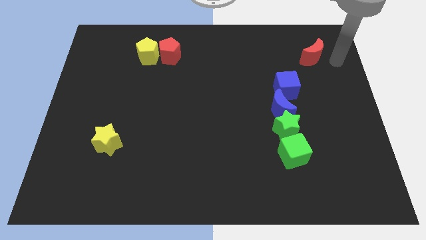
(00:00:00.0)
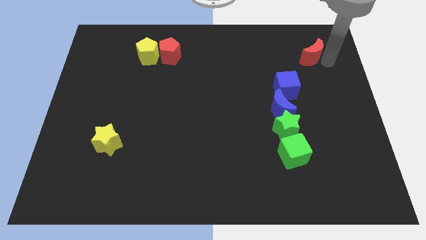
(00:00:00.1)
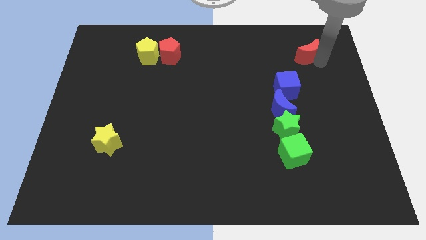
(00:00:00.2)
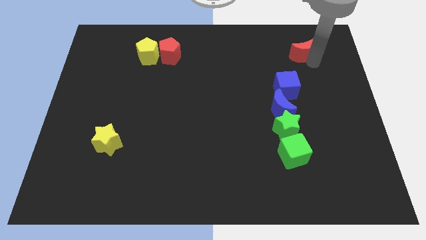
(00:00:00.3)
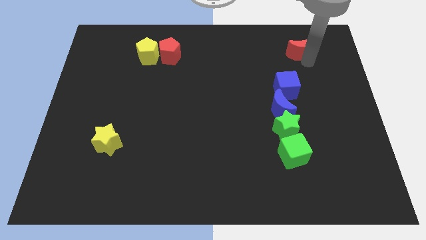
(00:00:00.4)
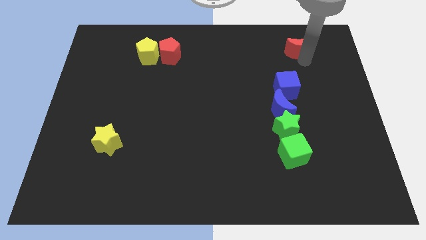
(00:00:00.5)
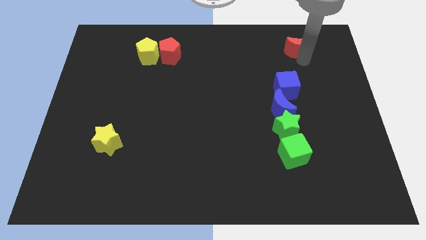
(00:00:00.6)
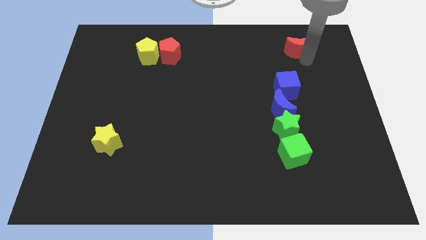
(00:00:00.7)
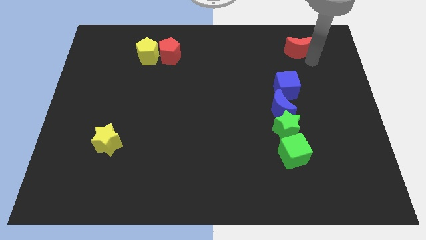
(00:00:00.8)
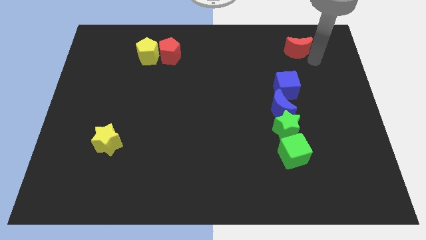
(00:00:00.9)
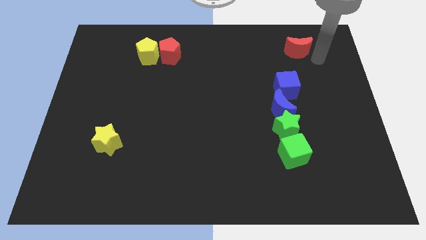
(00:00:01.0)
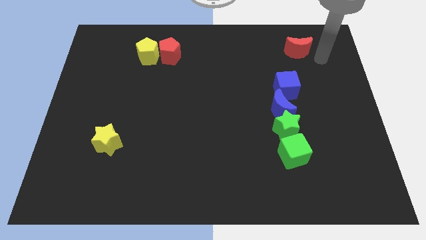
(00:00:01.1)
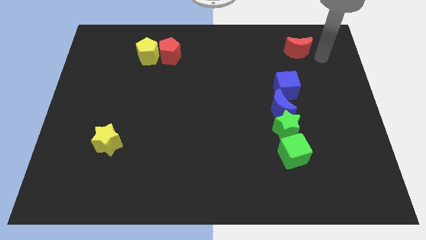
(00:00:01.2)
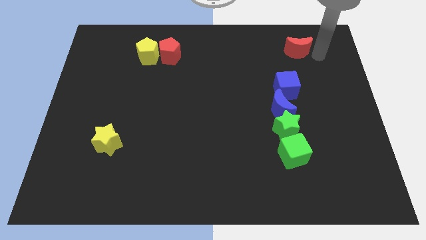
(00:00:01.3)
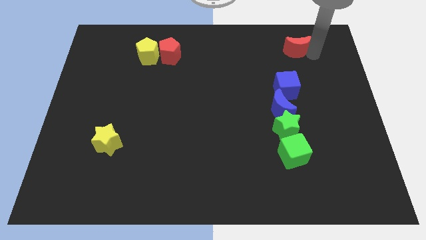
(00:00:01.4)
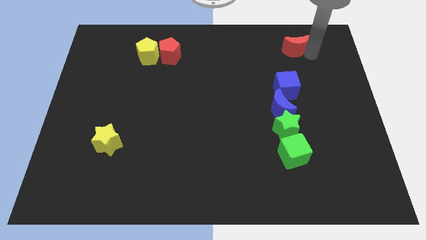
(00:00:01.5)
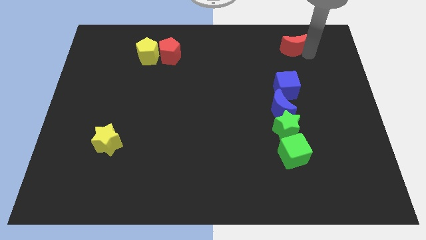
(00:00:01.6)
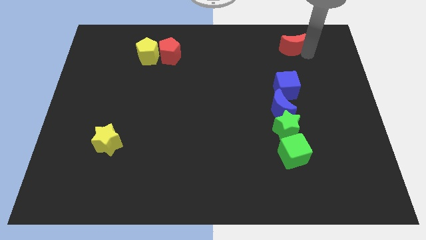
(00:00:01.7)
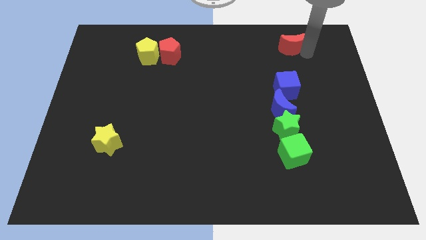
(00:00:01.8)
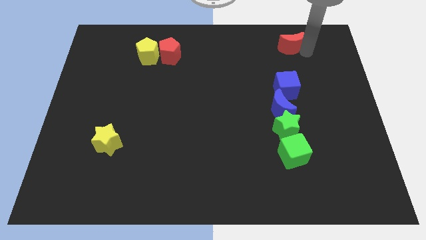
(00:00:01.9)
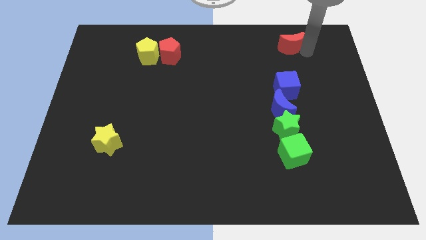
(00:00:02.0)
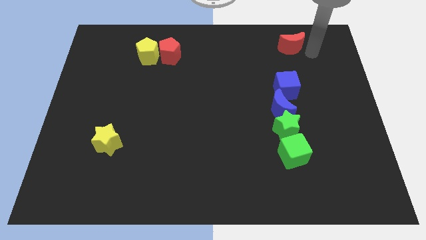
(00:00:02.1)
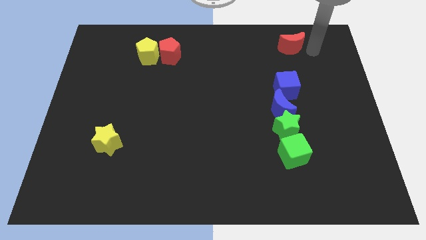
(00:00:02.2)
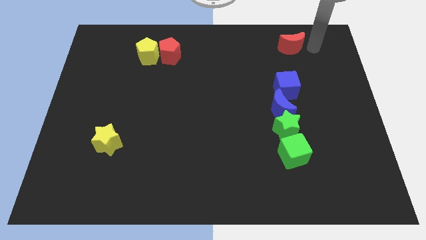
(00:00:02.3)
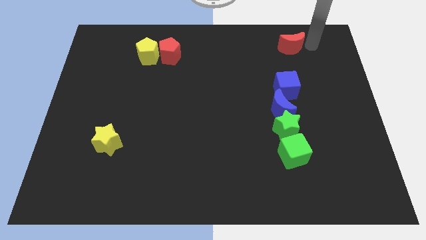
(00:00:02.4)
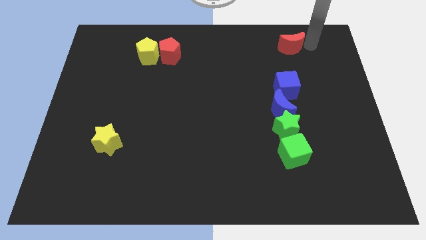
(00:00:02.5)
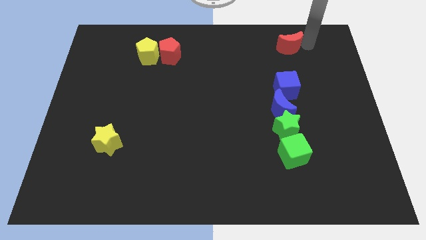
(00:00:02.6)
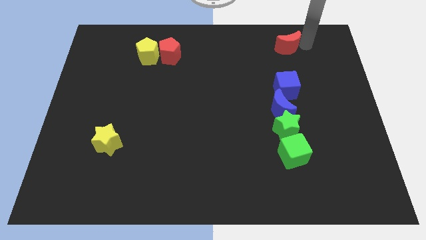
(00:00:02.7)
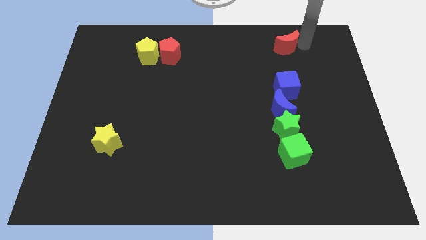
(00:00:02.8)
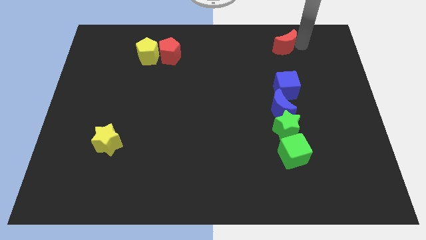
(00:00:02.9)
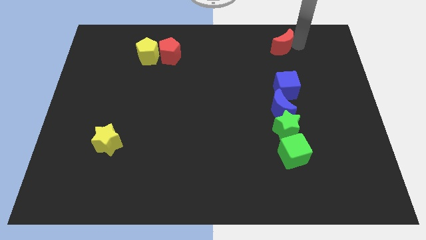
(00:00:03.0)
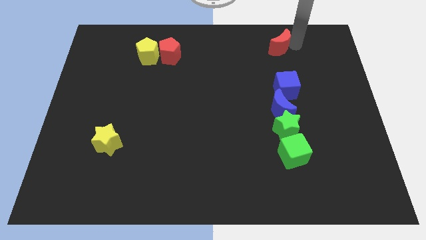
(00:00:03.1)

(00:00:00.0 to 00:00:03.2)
slide the red crescent vertically above the blue cube

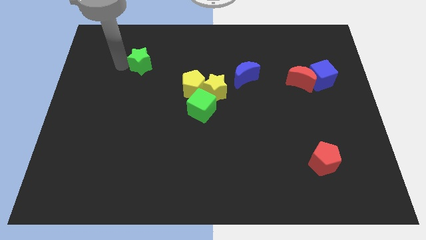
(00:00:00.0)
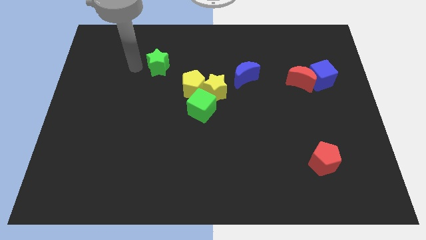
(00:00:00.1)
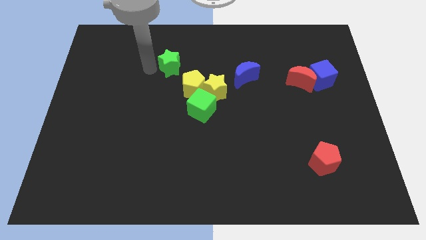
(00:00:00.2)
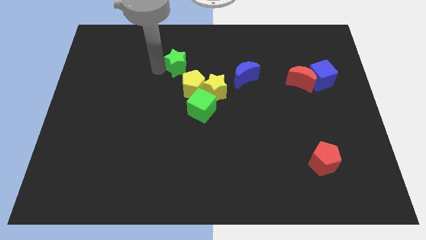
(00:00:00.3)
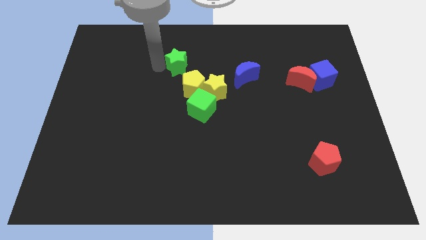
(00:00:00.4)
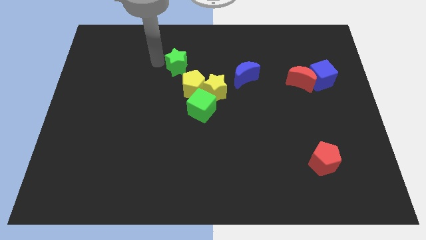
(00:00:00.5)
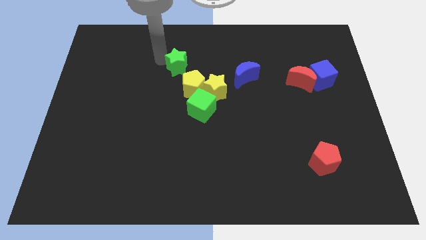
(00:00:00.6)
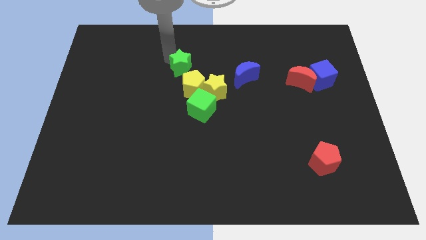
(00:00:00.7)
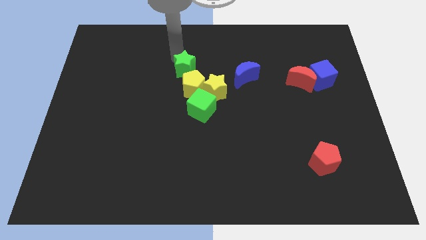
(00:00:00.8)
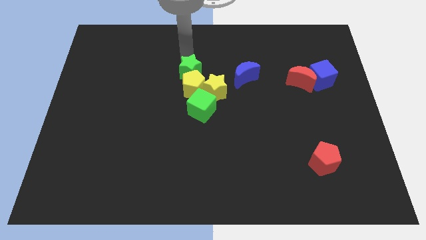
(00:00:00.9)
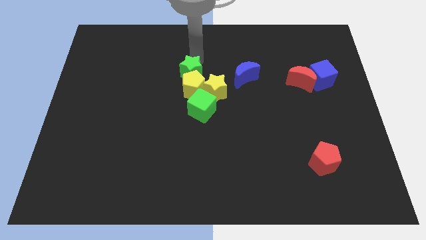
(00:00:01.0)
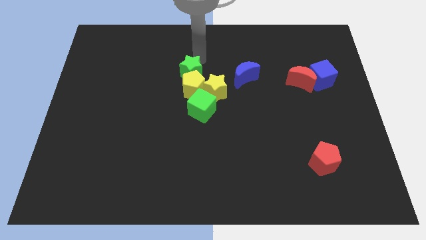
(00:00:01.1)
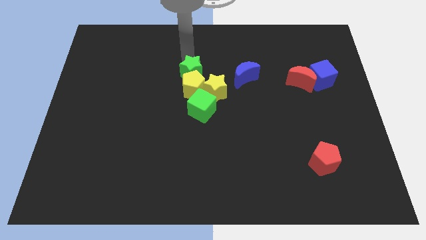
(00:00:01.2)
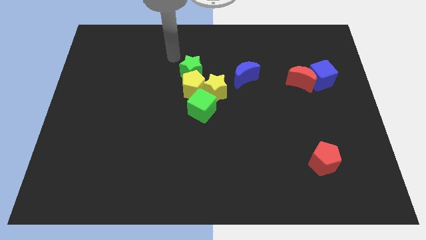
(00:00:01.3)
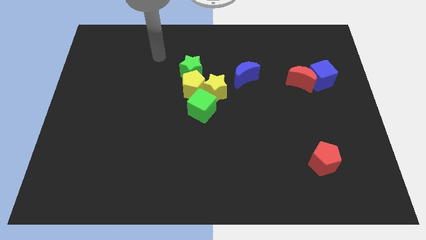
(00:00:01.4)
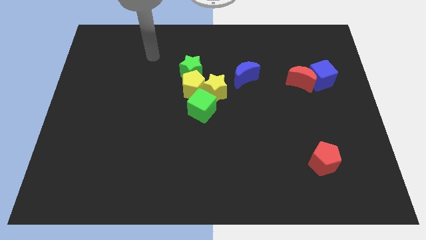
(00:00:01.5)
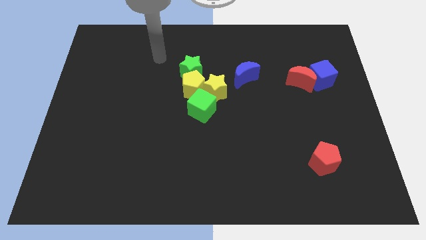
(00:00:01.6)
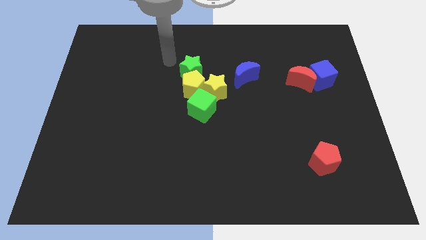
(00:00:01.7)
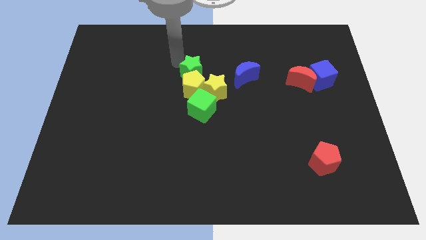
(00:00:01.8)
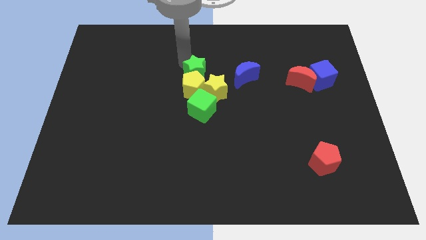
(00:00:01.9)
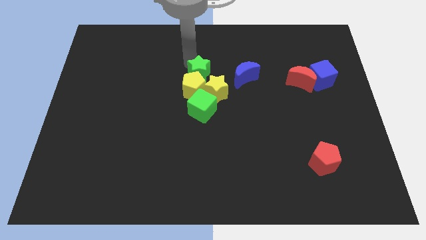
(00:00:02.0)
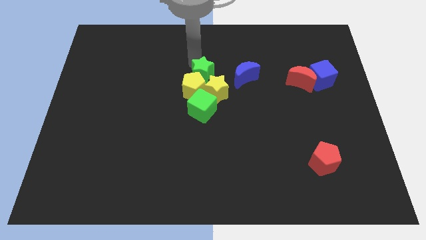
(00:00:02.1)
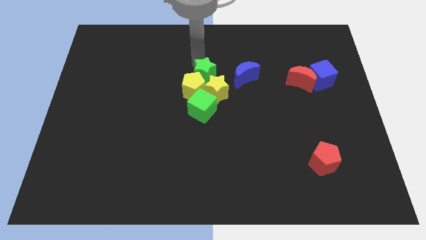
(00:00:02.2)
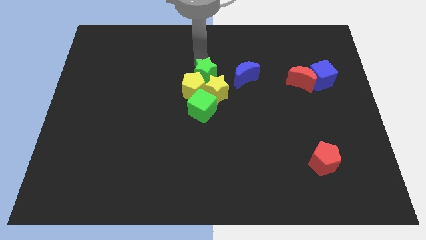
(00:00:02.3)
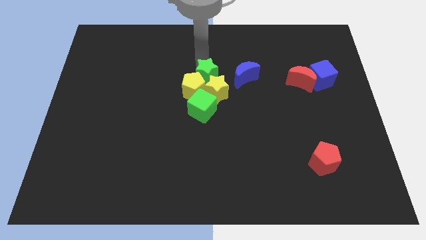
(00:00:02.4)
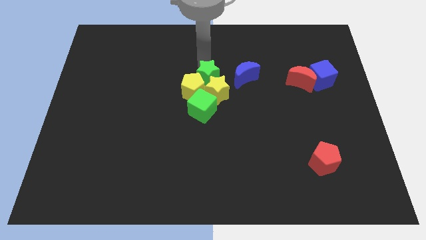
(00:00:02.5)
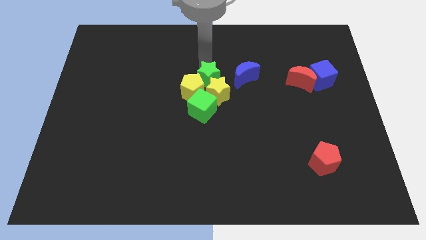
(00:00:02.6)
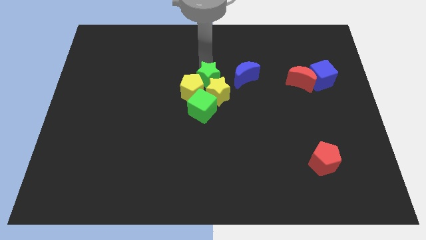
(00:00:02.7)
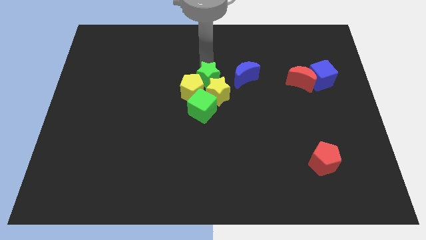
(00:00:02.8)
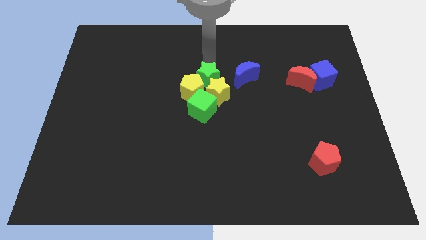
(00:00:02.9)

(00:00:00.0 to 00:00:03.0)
move green star into yellow blocks

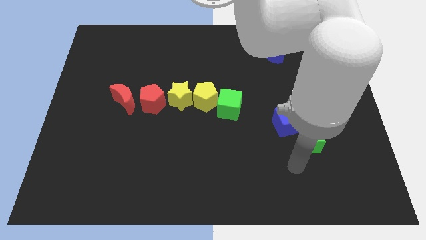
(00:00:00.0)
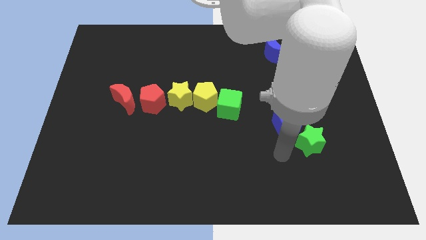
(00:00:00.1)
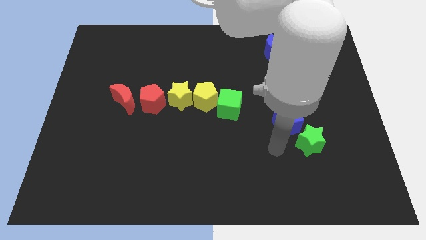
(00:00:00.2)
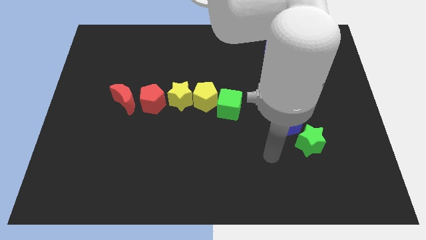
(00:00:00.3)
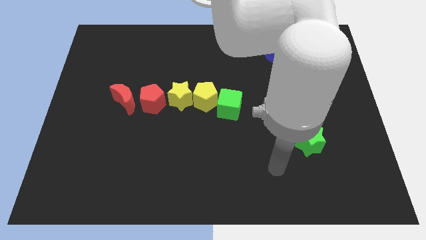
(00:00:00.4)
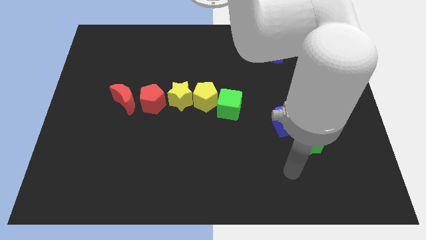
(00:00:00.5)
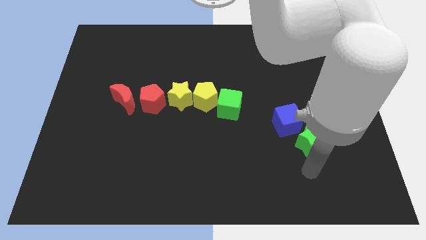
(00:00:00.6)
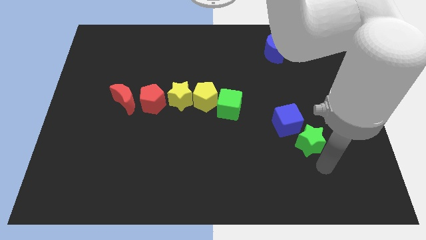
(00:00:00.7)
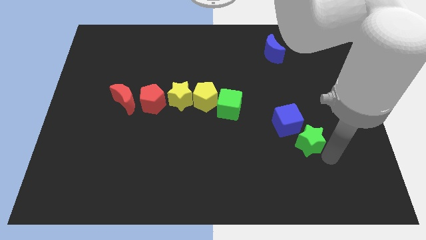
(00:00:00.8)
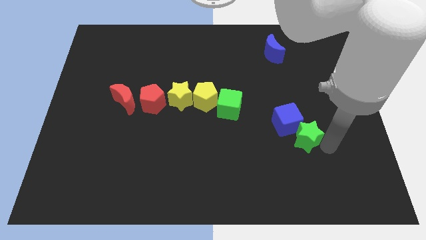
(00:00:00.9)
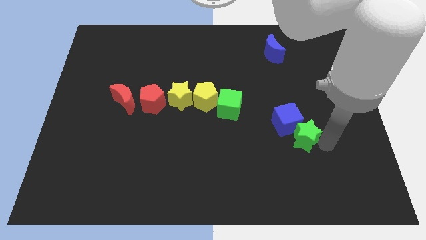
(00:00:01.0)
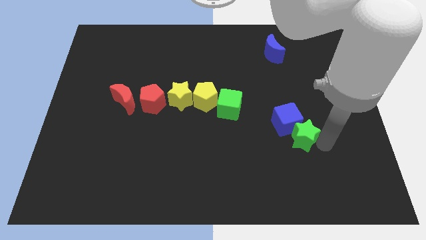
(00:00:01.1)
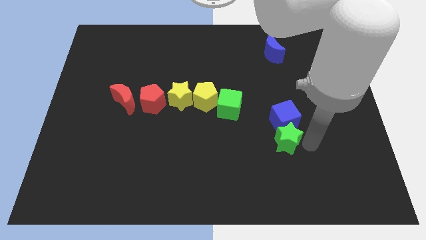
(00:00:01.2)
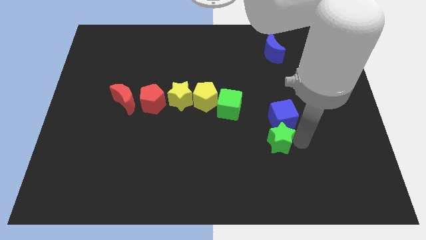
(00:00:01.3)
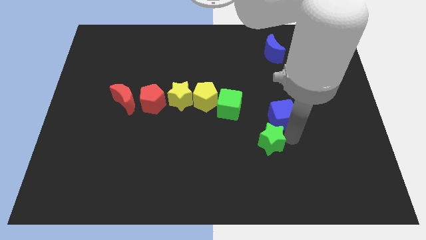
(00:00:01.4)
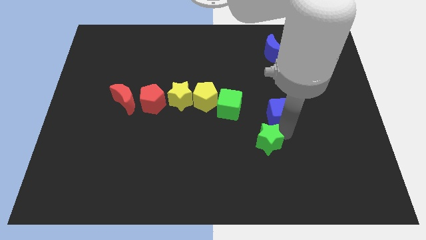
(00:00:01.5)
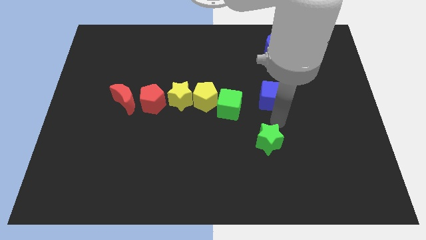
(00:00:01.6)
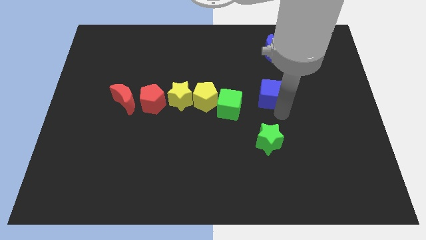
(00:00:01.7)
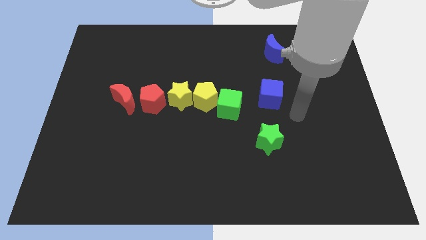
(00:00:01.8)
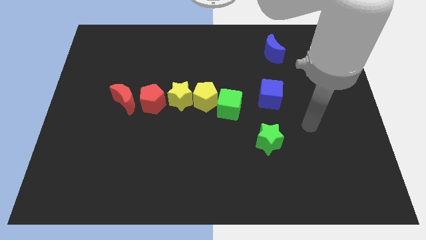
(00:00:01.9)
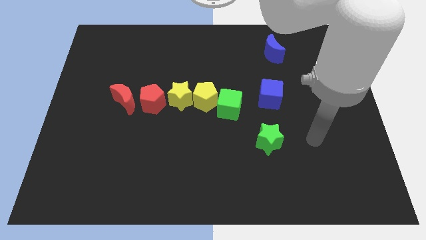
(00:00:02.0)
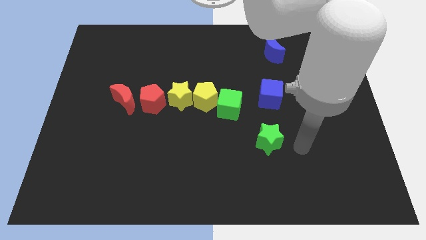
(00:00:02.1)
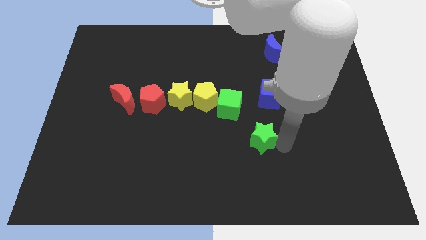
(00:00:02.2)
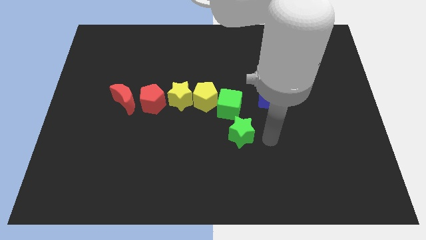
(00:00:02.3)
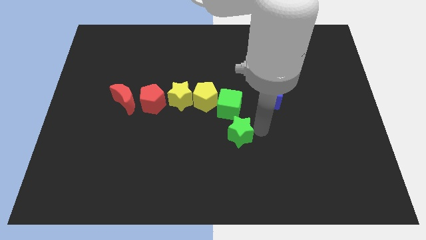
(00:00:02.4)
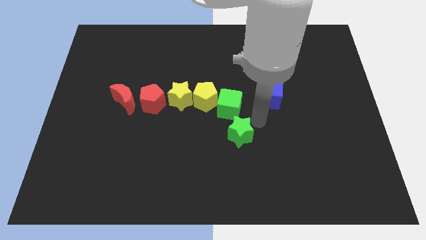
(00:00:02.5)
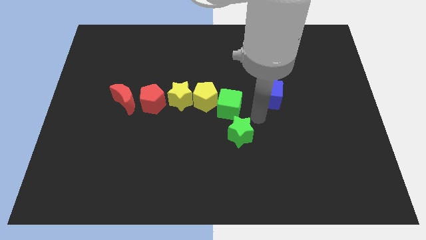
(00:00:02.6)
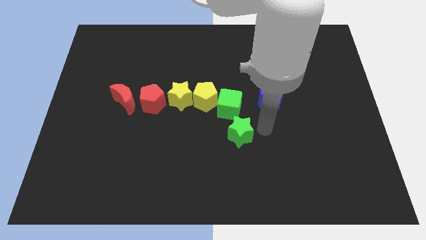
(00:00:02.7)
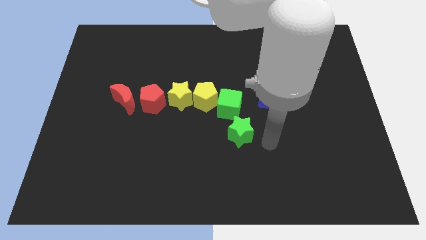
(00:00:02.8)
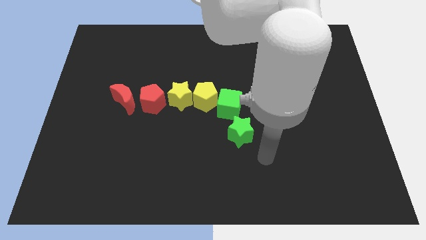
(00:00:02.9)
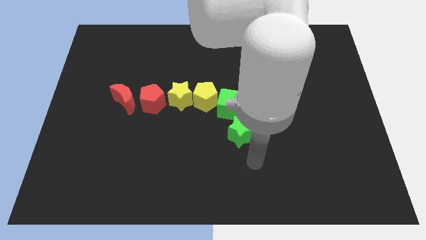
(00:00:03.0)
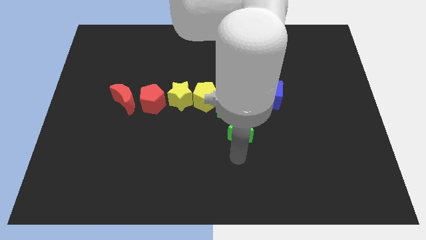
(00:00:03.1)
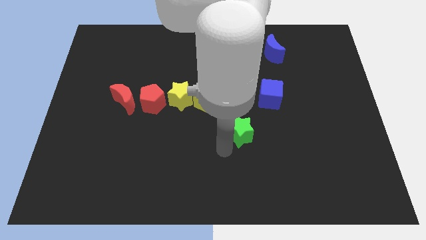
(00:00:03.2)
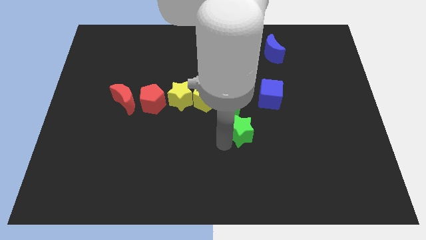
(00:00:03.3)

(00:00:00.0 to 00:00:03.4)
place green star below the green cube
